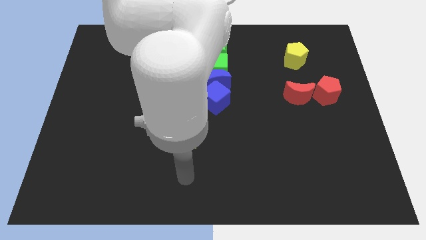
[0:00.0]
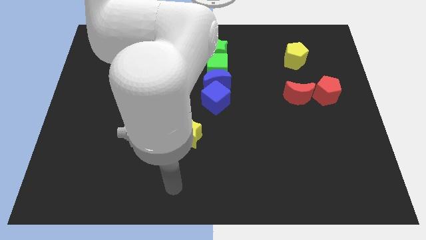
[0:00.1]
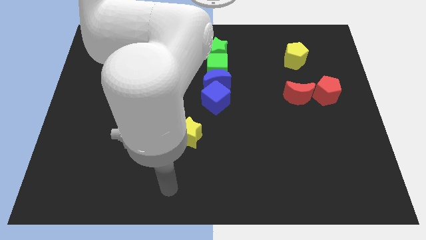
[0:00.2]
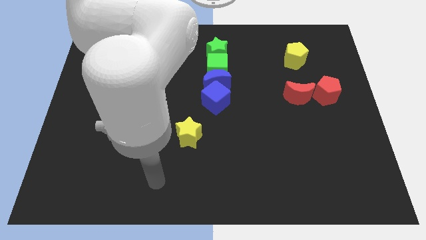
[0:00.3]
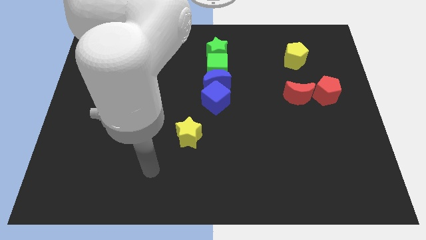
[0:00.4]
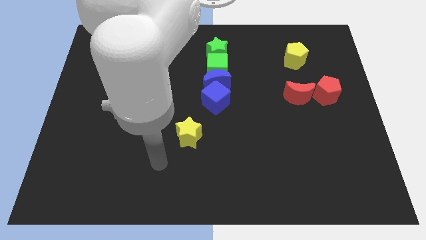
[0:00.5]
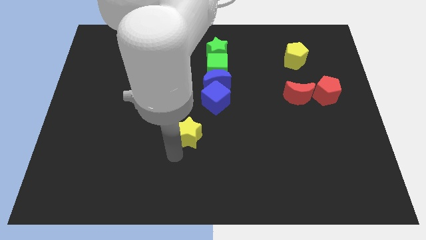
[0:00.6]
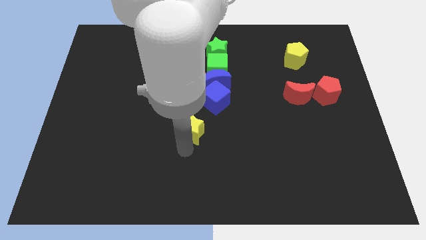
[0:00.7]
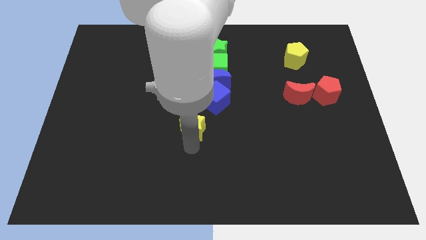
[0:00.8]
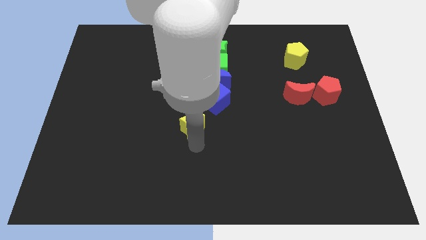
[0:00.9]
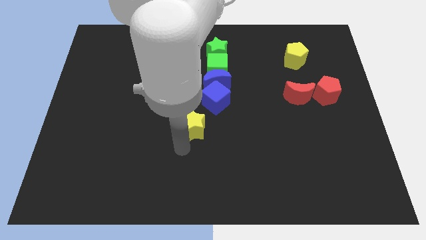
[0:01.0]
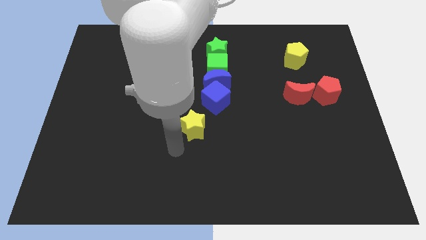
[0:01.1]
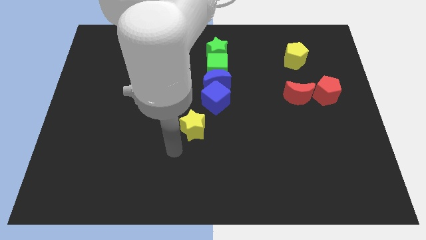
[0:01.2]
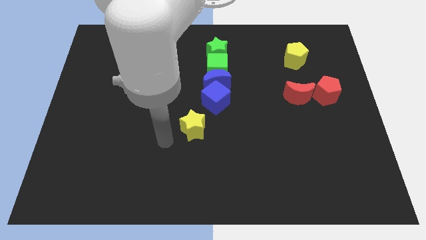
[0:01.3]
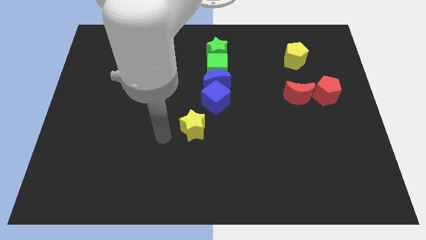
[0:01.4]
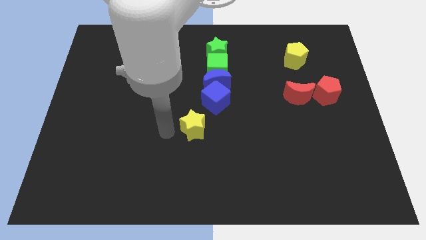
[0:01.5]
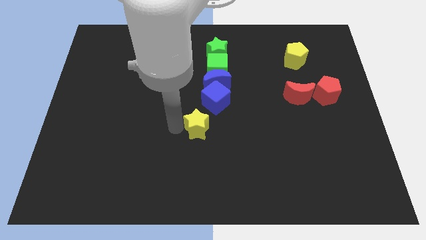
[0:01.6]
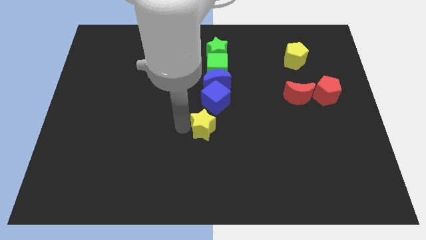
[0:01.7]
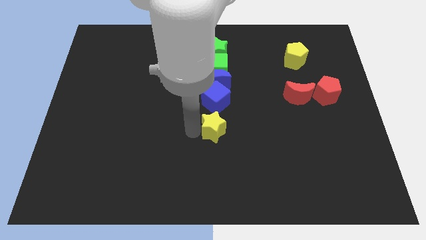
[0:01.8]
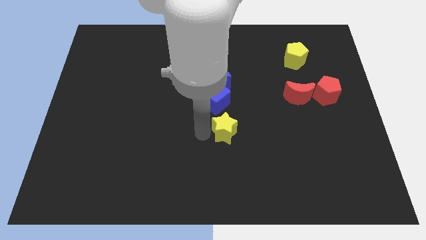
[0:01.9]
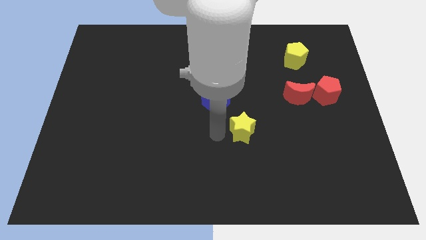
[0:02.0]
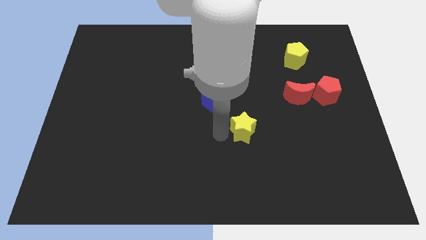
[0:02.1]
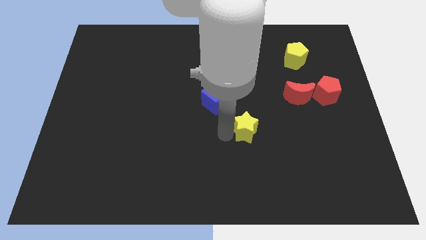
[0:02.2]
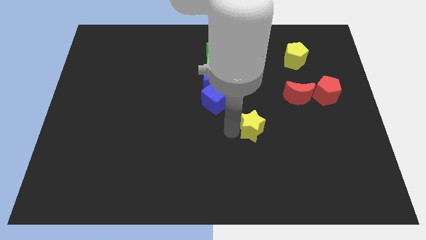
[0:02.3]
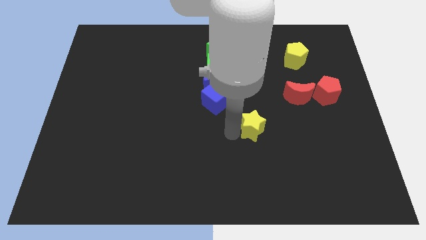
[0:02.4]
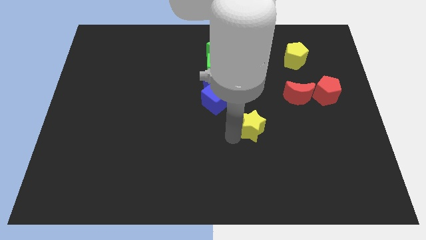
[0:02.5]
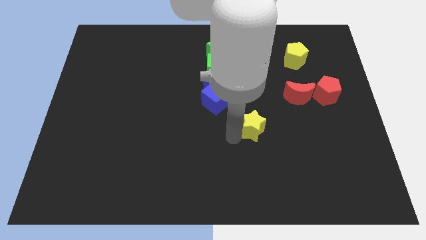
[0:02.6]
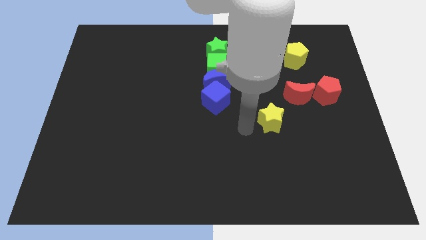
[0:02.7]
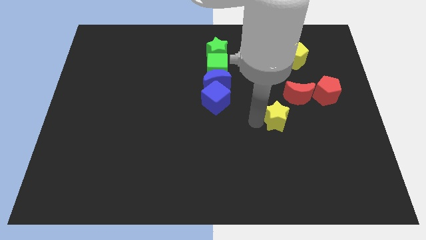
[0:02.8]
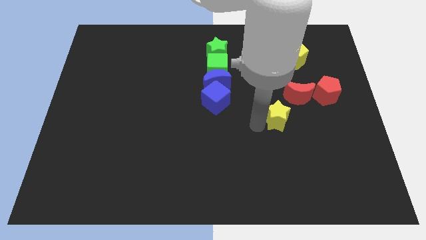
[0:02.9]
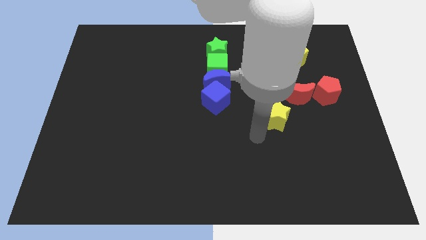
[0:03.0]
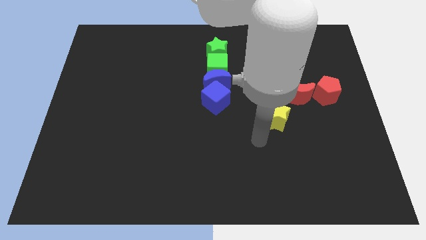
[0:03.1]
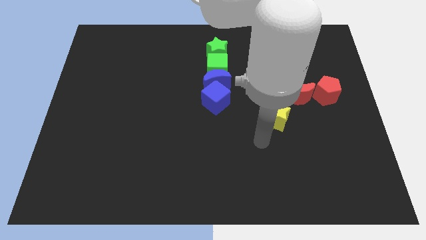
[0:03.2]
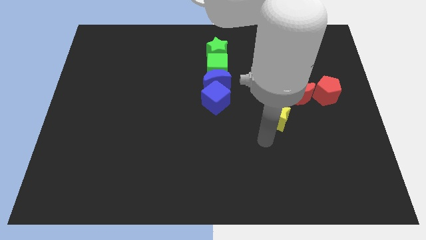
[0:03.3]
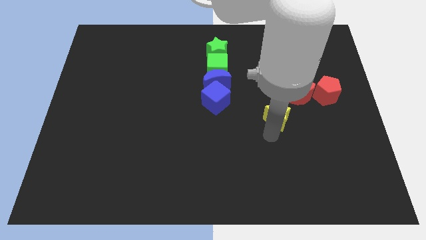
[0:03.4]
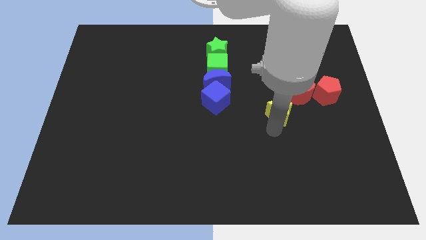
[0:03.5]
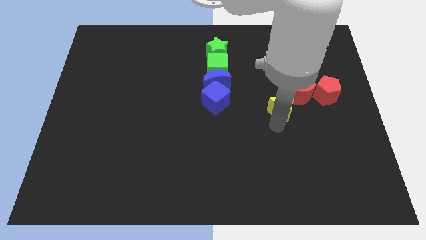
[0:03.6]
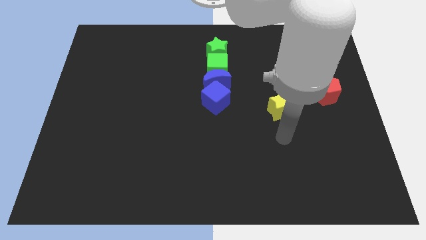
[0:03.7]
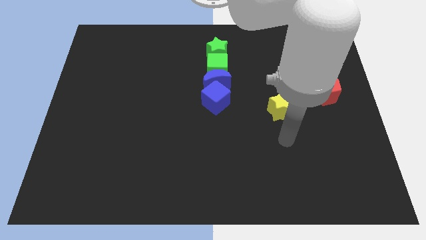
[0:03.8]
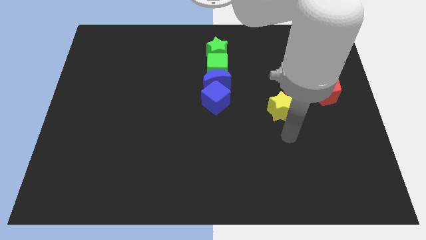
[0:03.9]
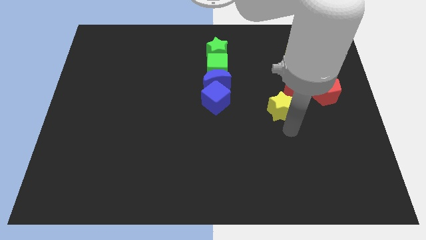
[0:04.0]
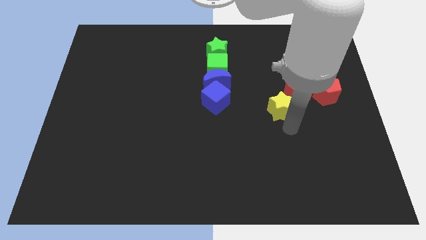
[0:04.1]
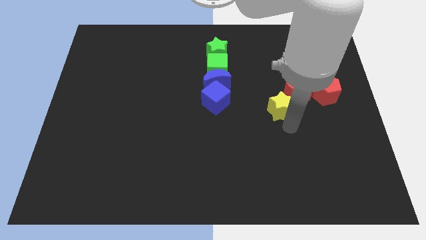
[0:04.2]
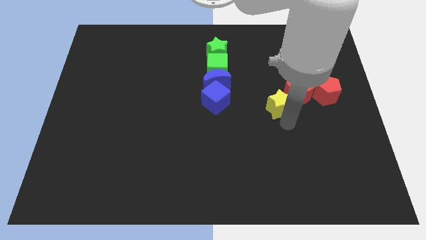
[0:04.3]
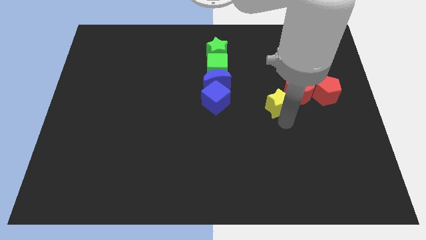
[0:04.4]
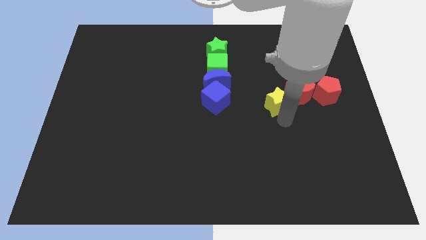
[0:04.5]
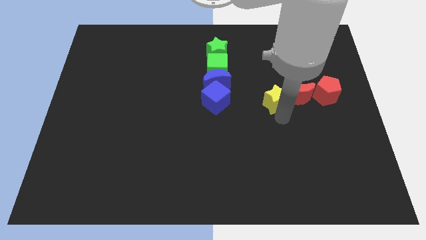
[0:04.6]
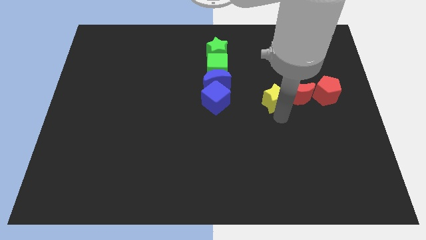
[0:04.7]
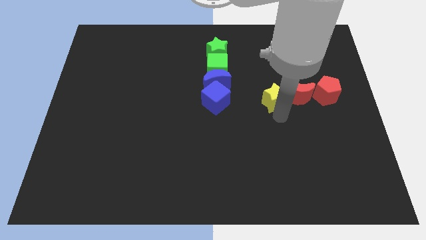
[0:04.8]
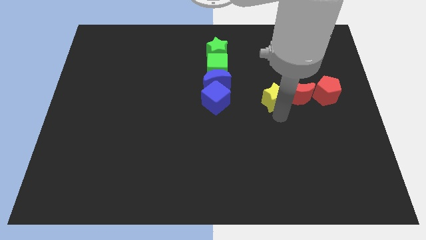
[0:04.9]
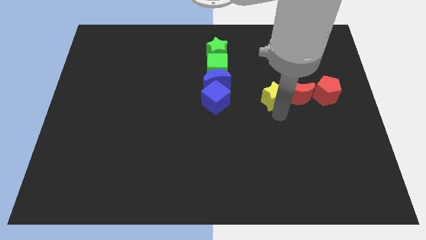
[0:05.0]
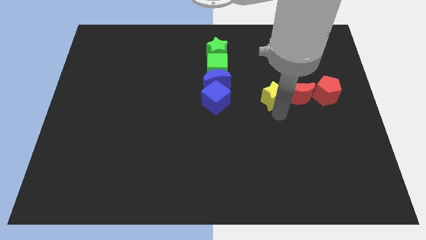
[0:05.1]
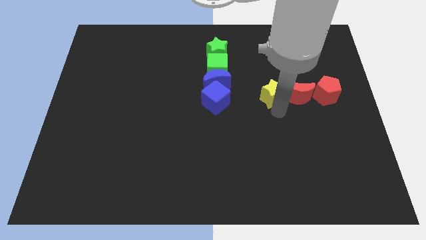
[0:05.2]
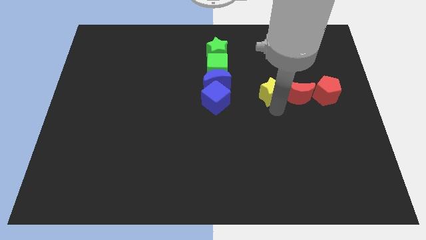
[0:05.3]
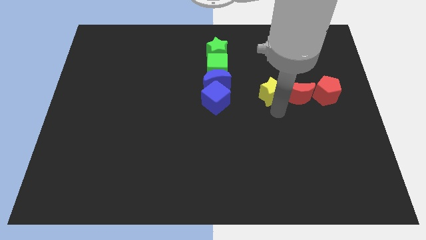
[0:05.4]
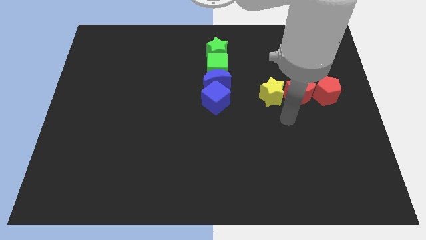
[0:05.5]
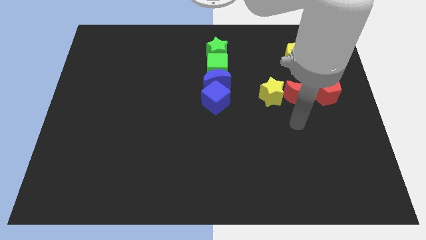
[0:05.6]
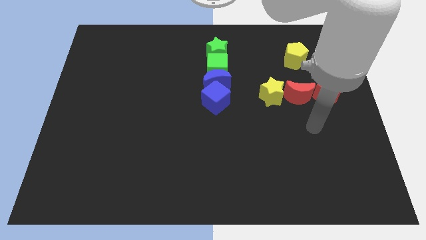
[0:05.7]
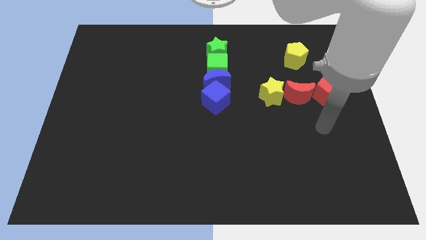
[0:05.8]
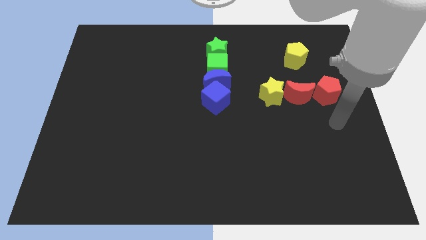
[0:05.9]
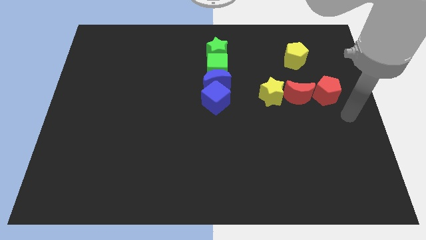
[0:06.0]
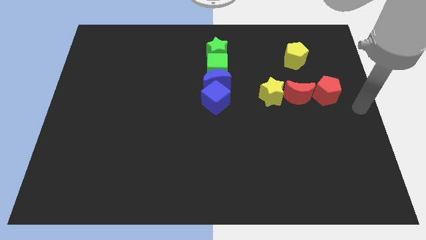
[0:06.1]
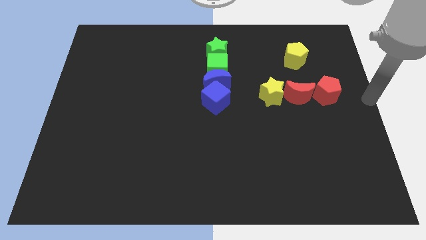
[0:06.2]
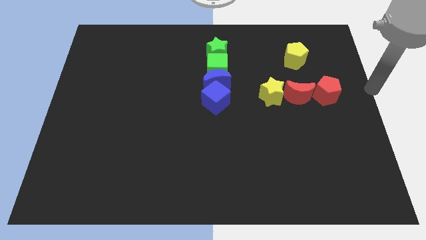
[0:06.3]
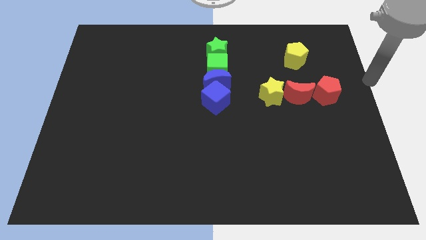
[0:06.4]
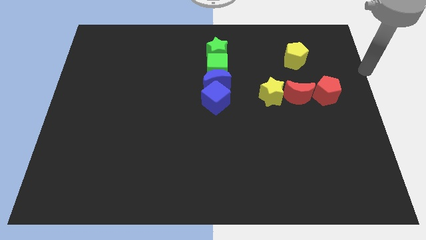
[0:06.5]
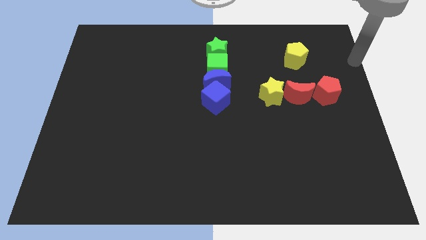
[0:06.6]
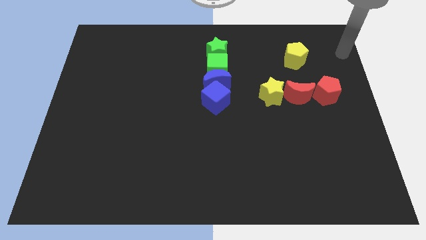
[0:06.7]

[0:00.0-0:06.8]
place the yellow star to the left of red crescent

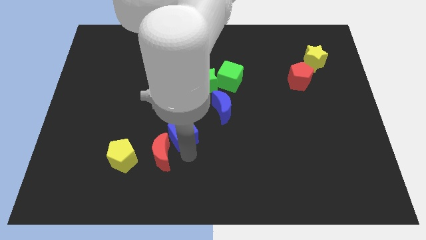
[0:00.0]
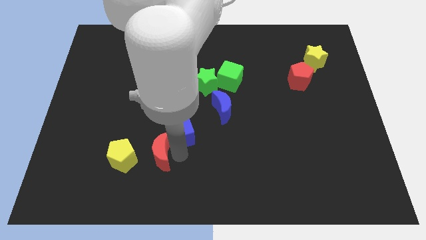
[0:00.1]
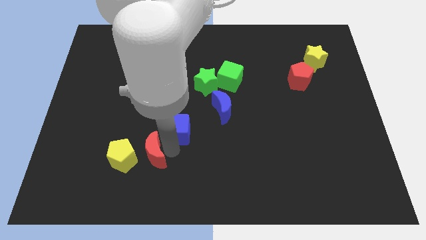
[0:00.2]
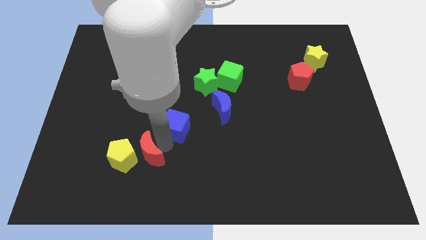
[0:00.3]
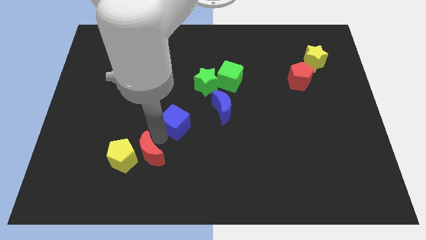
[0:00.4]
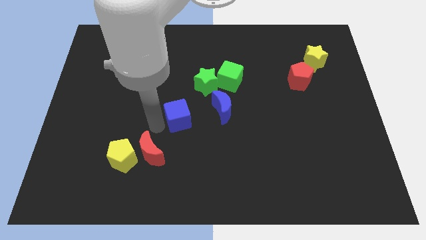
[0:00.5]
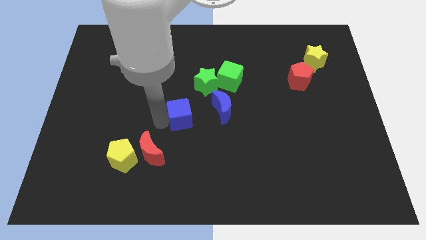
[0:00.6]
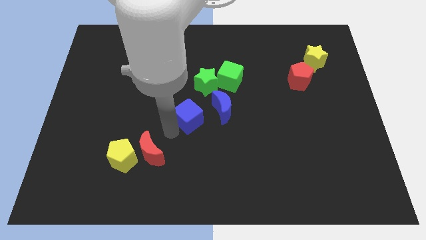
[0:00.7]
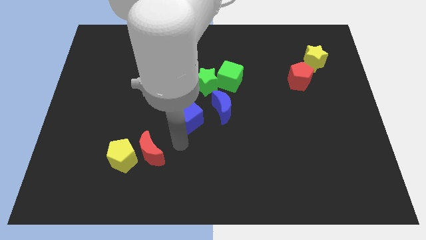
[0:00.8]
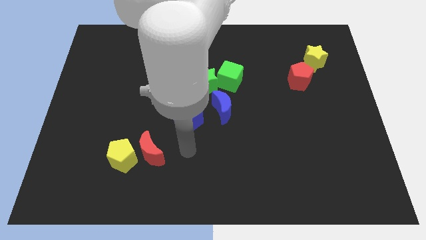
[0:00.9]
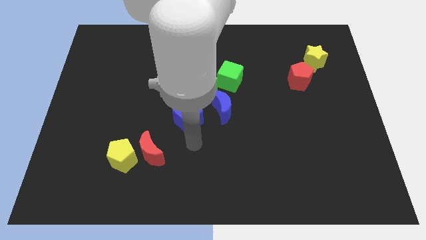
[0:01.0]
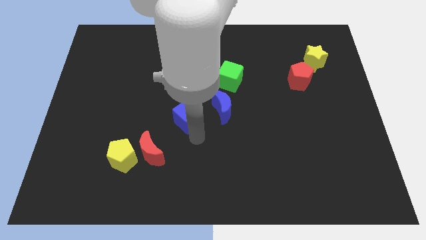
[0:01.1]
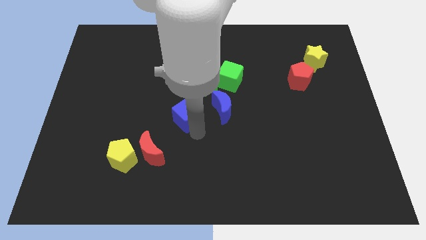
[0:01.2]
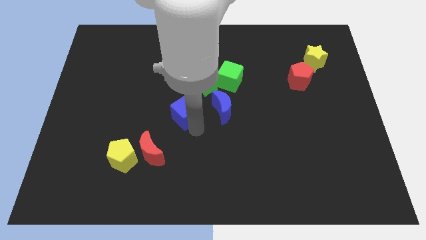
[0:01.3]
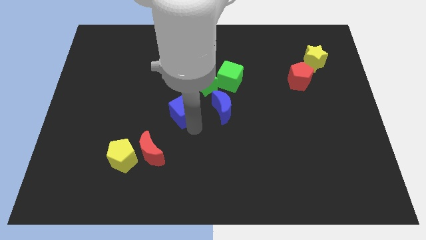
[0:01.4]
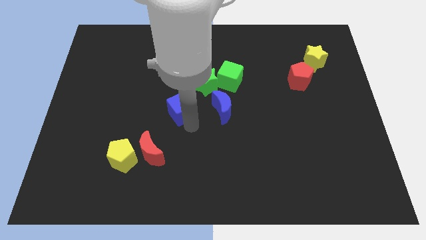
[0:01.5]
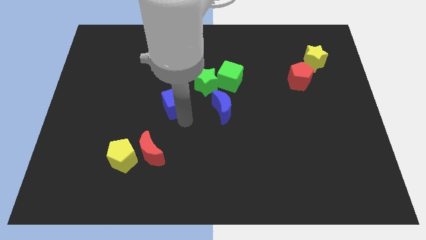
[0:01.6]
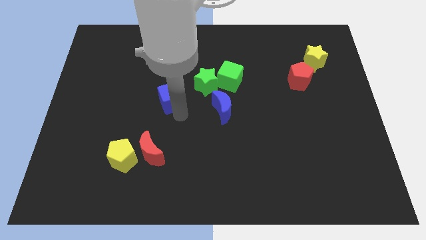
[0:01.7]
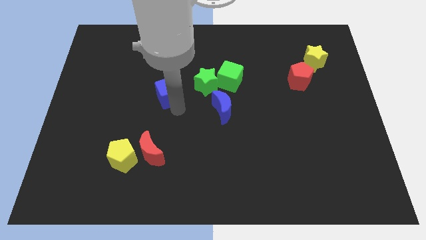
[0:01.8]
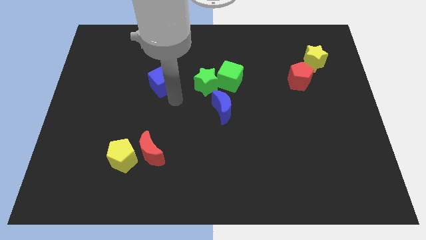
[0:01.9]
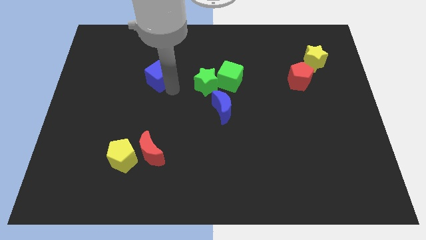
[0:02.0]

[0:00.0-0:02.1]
separate blue cube from red moon
